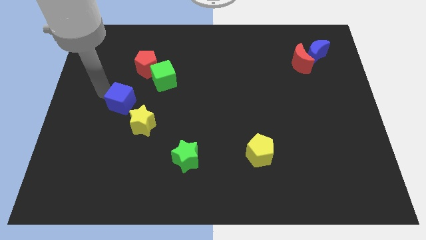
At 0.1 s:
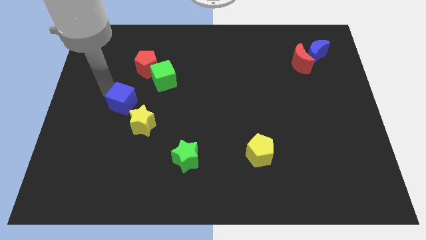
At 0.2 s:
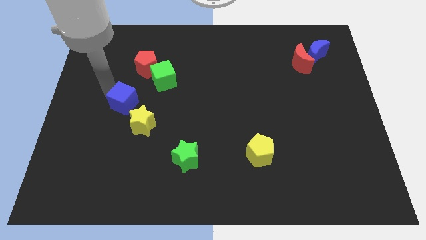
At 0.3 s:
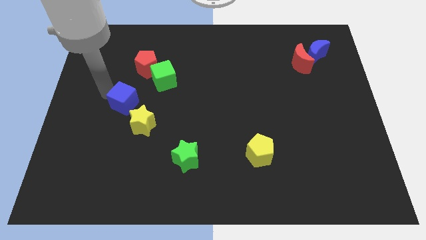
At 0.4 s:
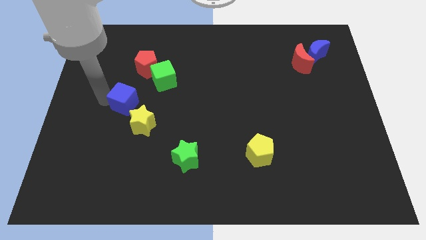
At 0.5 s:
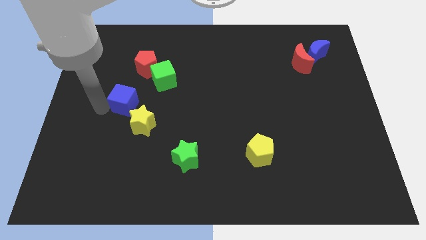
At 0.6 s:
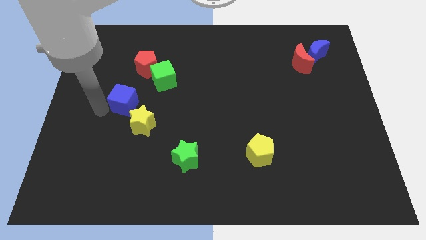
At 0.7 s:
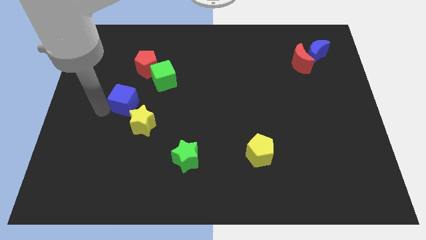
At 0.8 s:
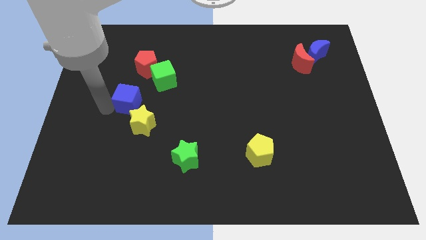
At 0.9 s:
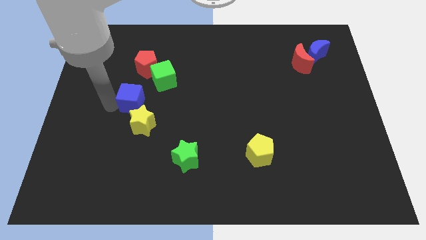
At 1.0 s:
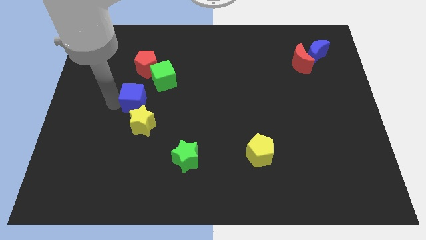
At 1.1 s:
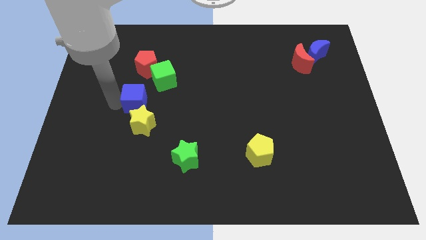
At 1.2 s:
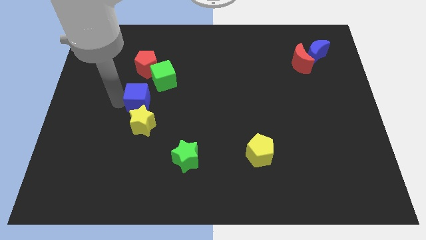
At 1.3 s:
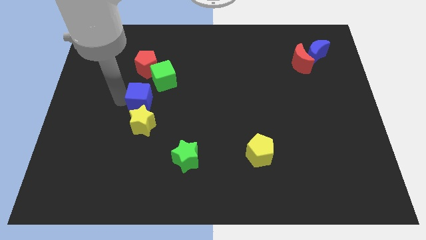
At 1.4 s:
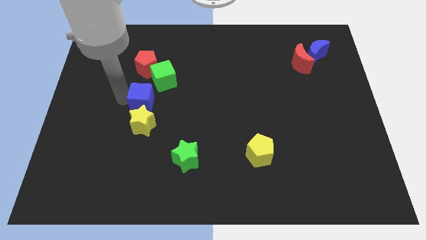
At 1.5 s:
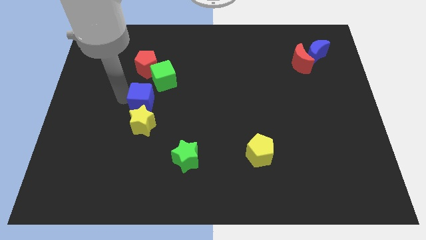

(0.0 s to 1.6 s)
put the blue cube above the yellow star

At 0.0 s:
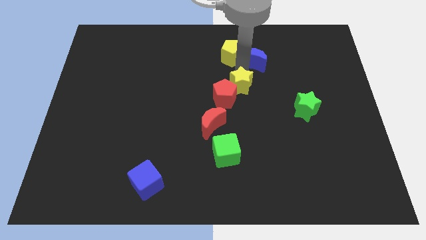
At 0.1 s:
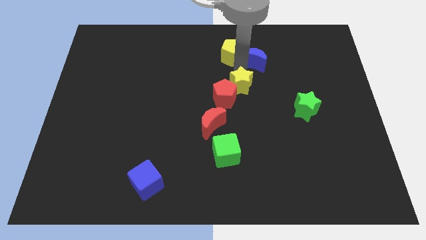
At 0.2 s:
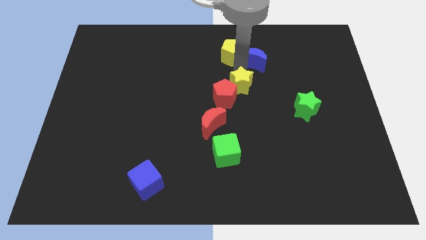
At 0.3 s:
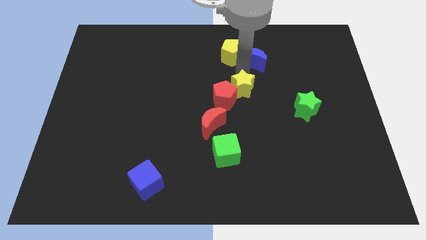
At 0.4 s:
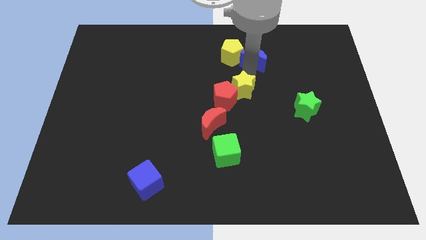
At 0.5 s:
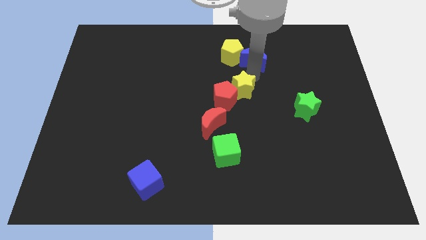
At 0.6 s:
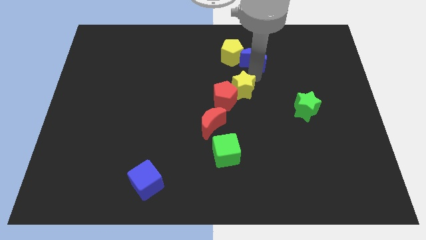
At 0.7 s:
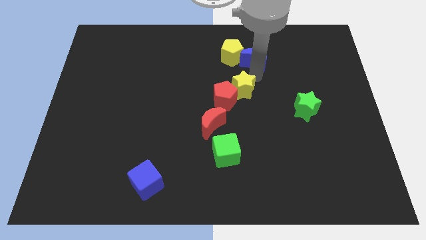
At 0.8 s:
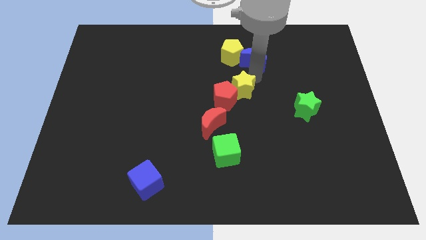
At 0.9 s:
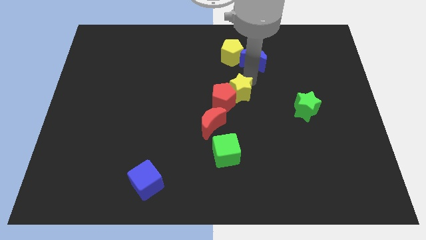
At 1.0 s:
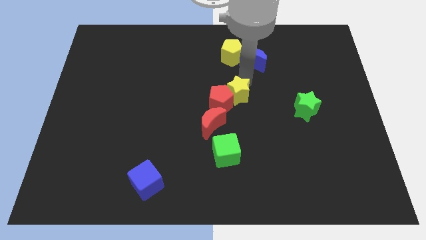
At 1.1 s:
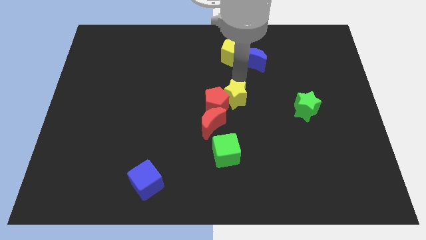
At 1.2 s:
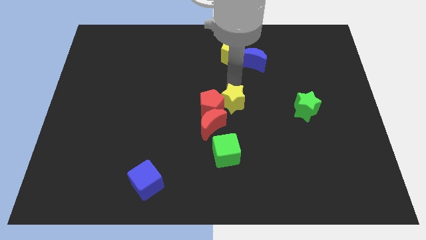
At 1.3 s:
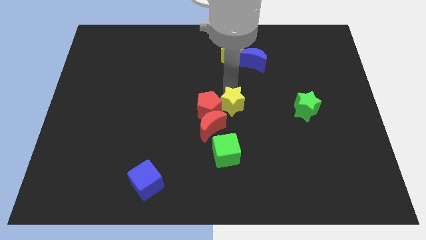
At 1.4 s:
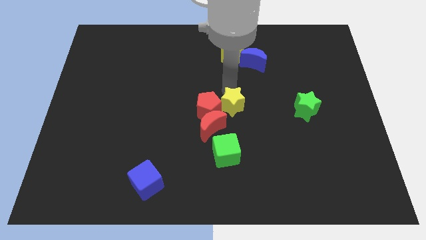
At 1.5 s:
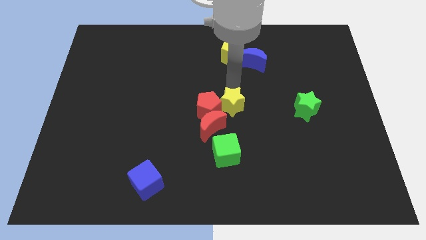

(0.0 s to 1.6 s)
separate yellow star from yellow pentagon

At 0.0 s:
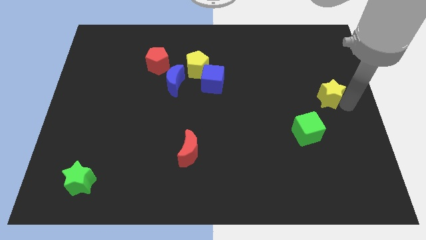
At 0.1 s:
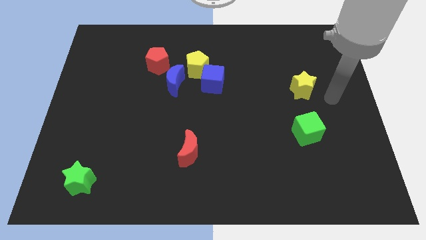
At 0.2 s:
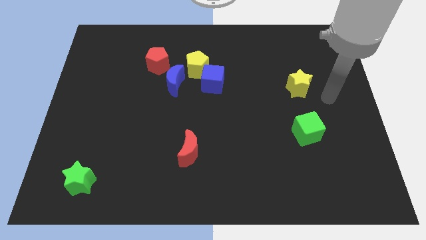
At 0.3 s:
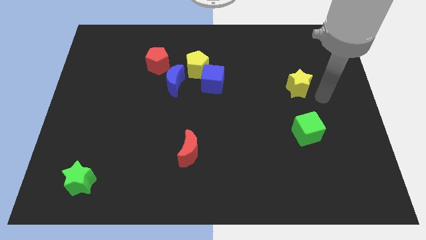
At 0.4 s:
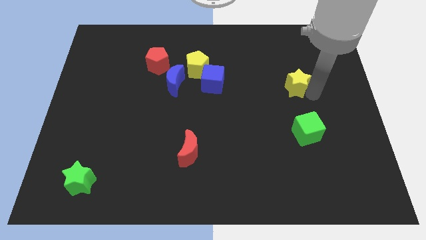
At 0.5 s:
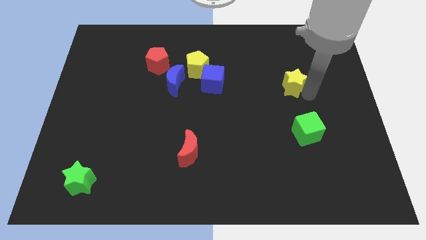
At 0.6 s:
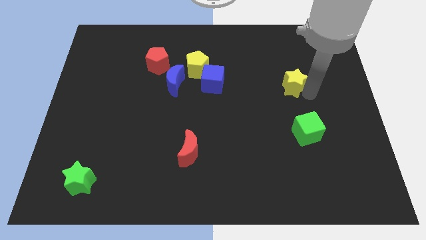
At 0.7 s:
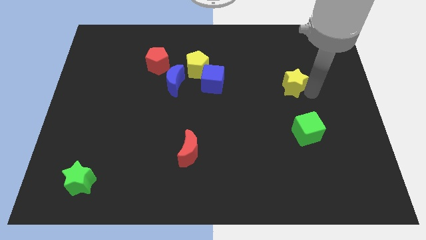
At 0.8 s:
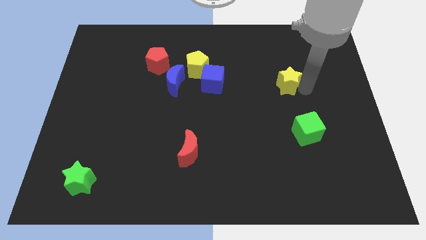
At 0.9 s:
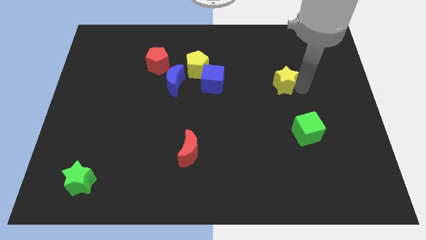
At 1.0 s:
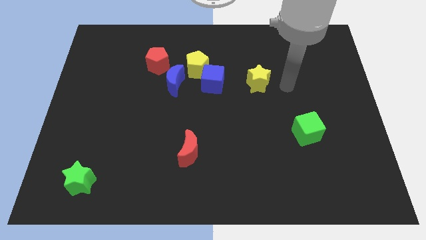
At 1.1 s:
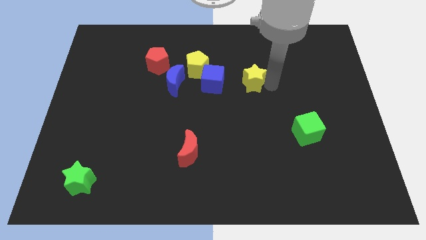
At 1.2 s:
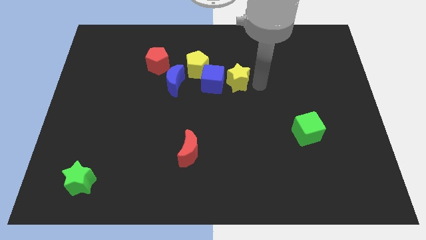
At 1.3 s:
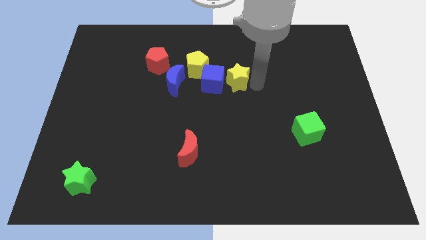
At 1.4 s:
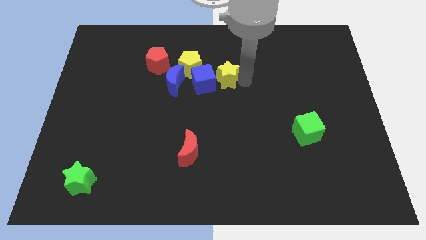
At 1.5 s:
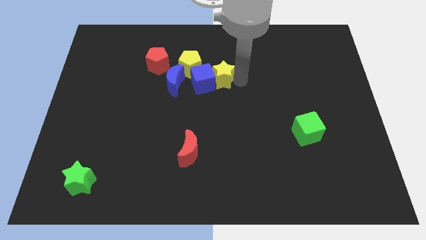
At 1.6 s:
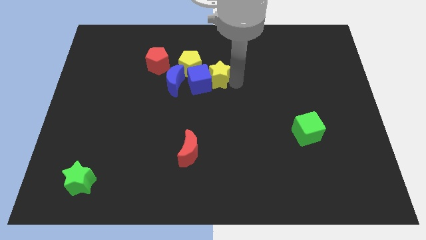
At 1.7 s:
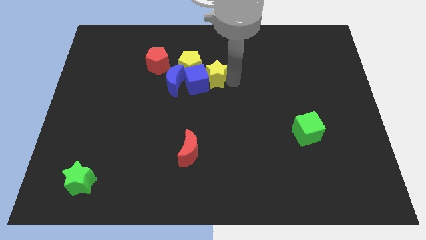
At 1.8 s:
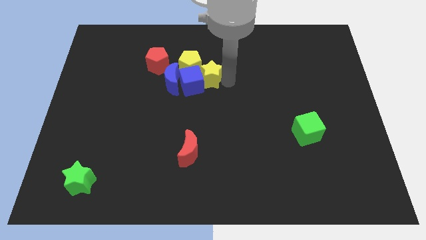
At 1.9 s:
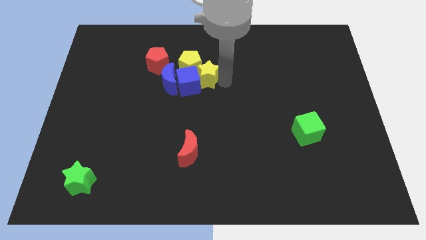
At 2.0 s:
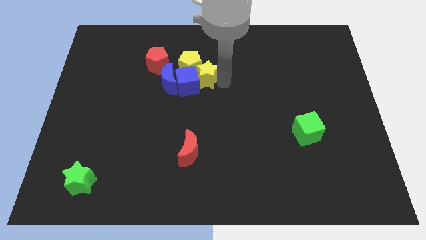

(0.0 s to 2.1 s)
push yellow star into blue cube

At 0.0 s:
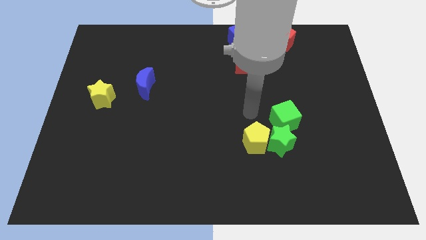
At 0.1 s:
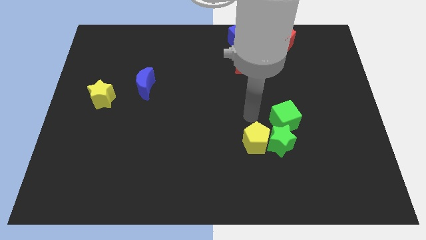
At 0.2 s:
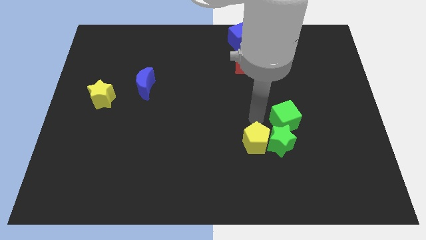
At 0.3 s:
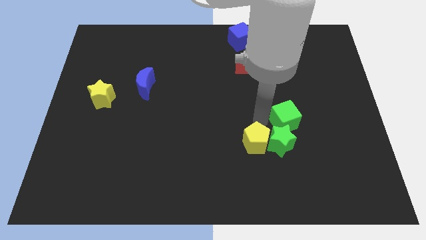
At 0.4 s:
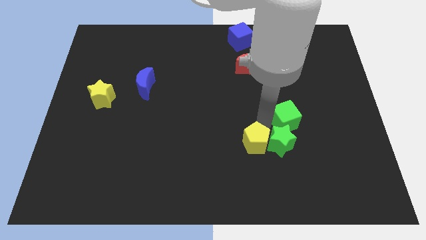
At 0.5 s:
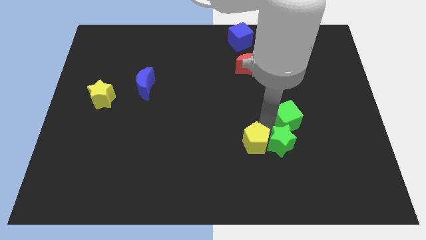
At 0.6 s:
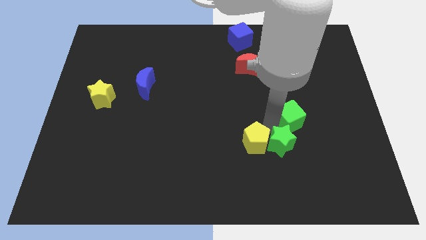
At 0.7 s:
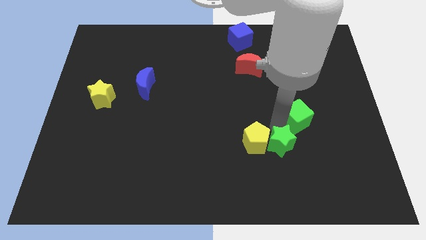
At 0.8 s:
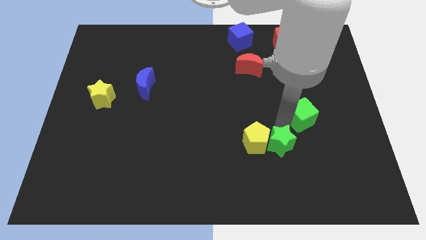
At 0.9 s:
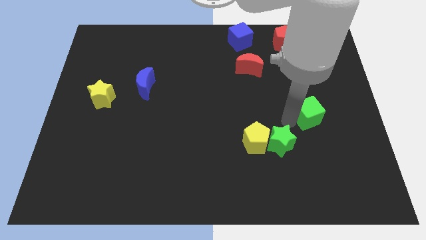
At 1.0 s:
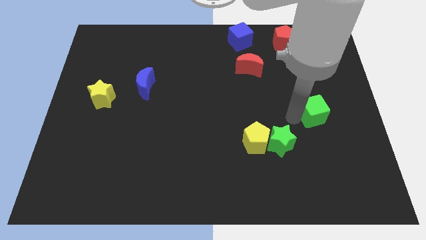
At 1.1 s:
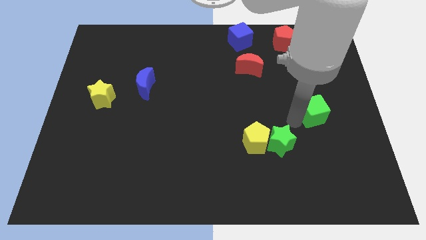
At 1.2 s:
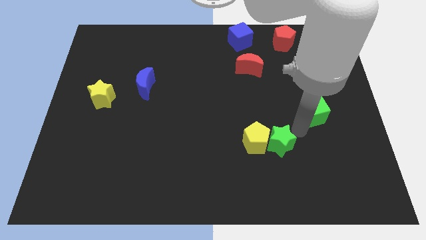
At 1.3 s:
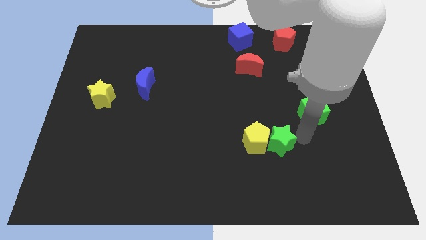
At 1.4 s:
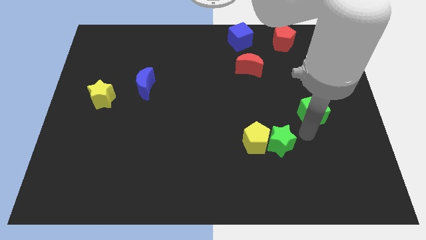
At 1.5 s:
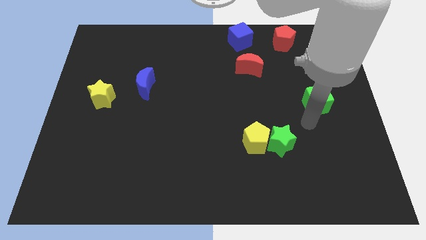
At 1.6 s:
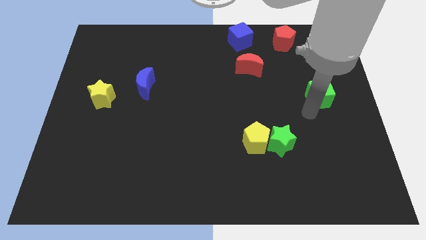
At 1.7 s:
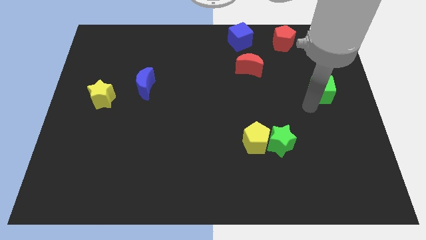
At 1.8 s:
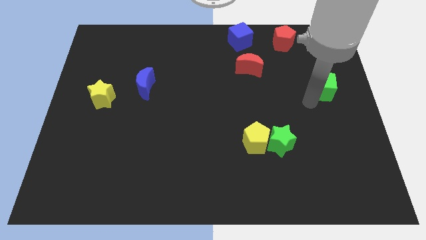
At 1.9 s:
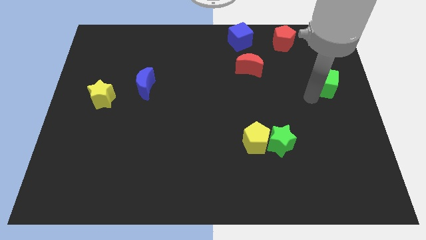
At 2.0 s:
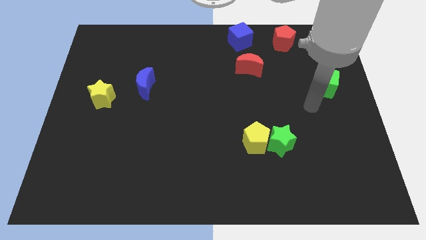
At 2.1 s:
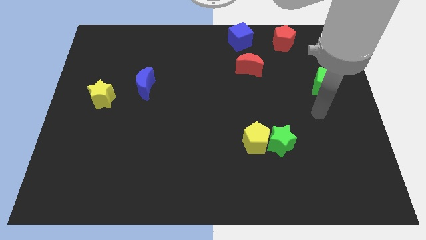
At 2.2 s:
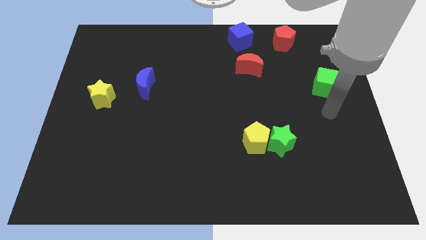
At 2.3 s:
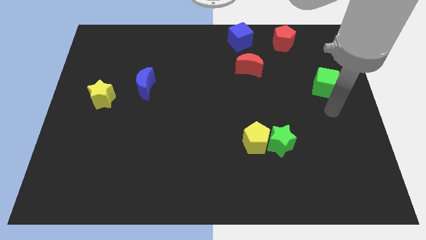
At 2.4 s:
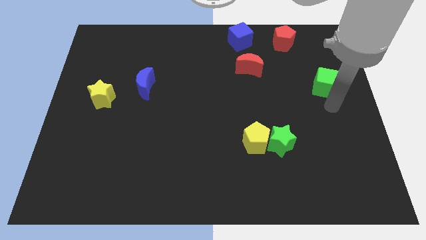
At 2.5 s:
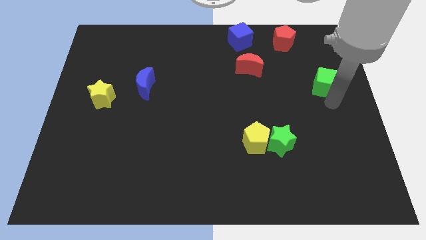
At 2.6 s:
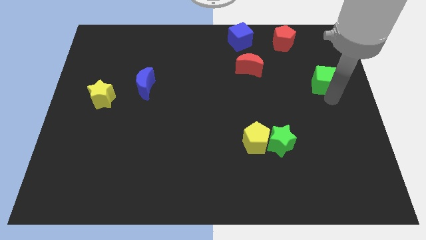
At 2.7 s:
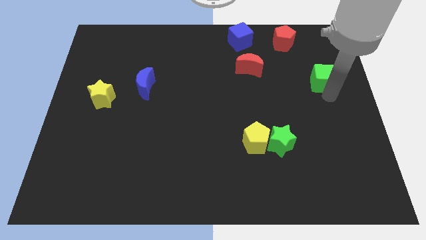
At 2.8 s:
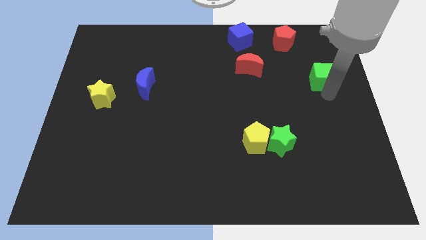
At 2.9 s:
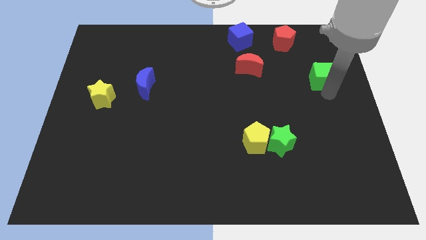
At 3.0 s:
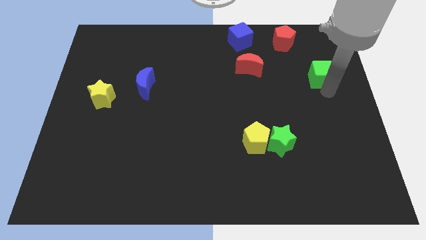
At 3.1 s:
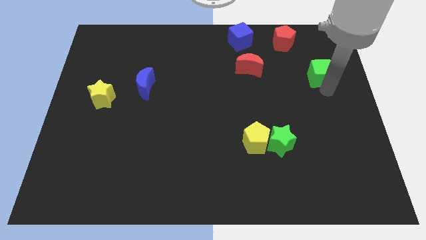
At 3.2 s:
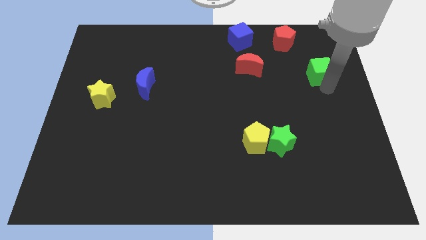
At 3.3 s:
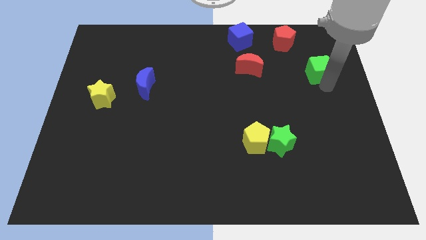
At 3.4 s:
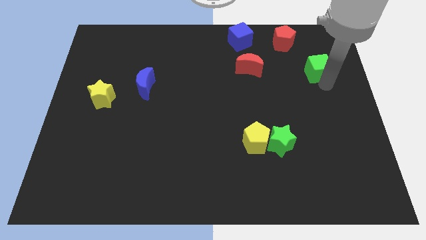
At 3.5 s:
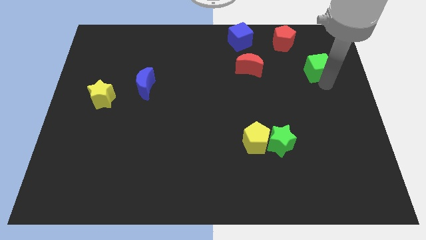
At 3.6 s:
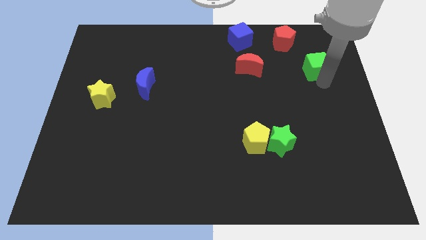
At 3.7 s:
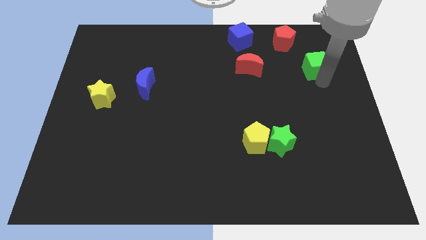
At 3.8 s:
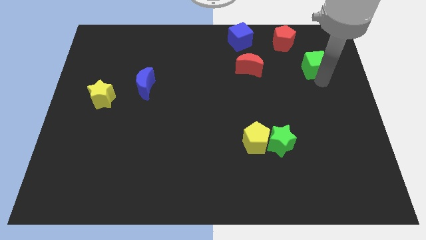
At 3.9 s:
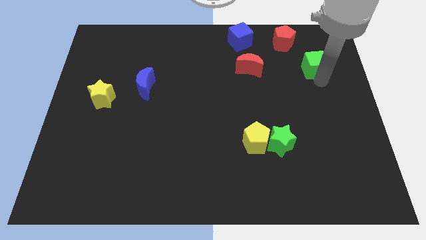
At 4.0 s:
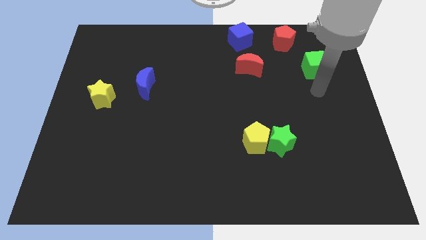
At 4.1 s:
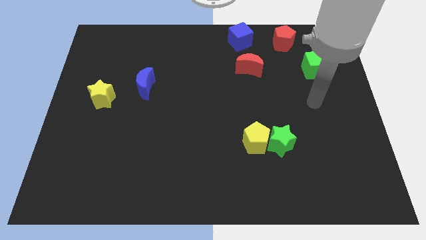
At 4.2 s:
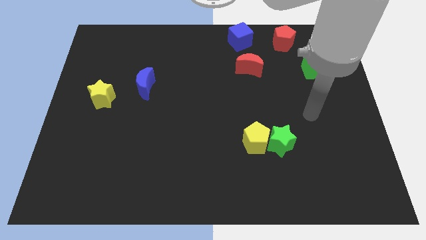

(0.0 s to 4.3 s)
move the green cube to the horizontal right of the red moon
